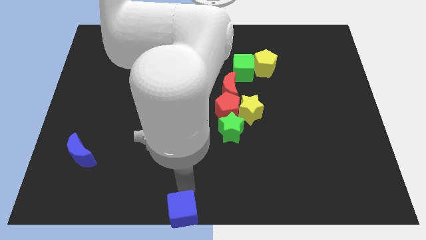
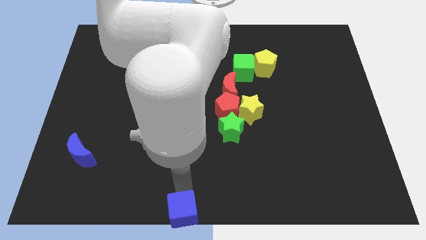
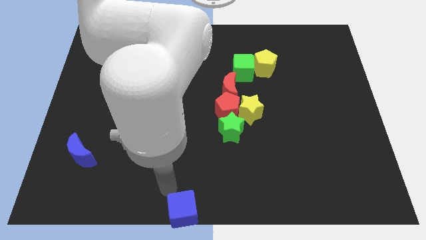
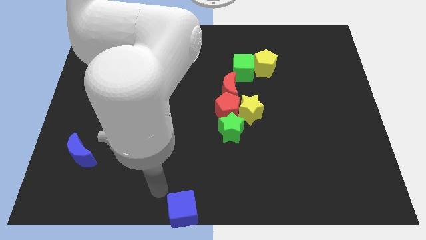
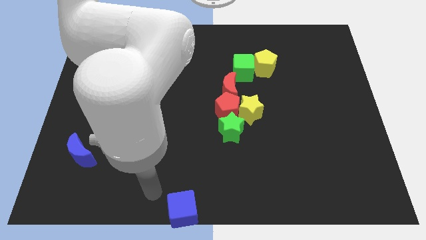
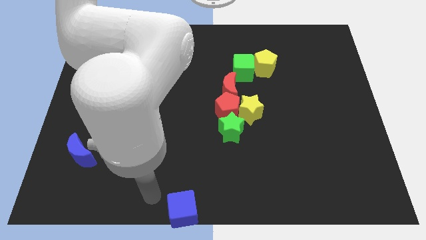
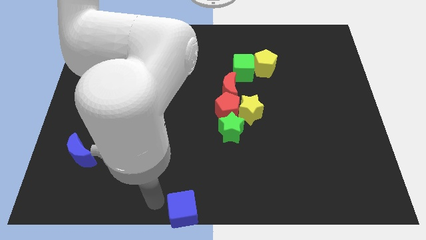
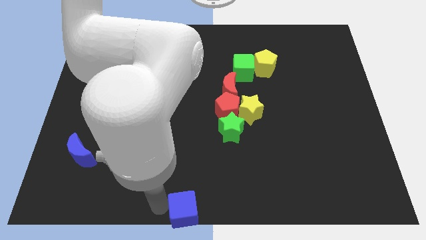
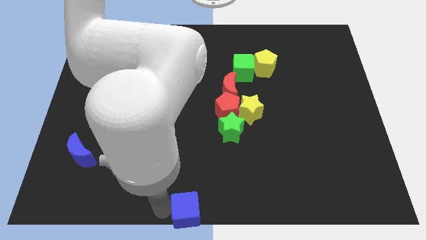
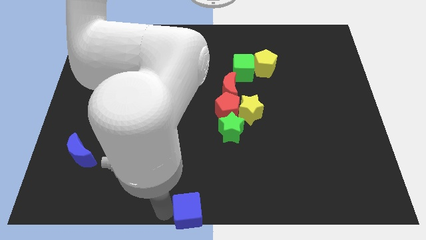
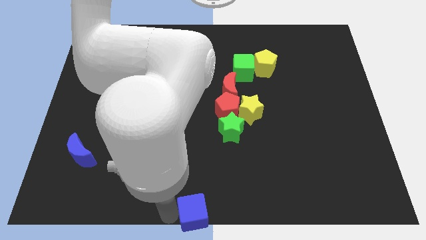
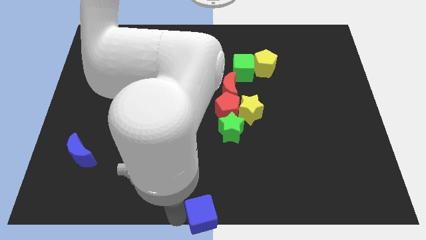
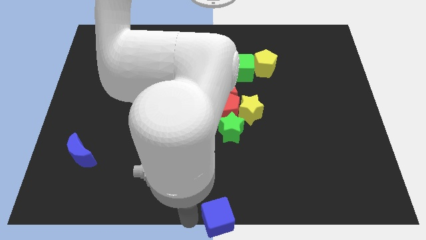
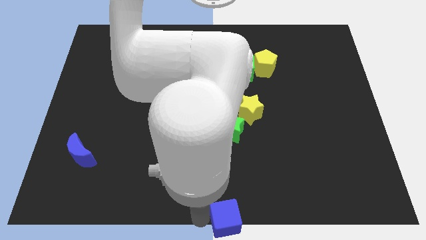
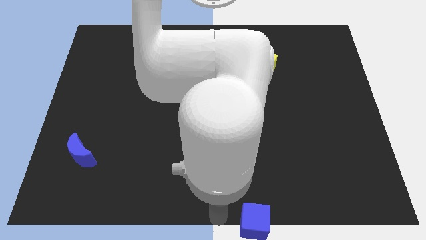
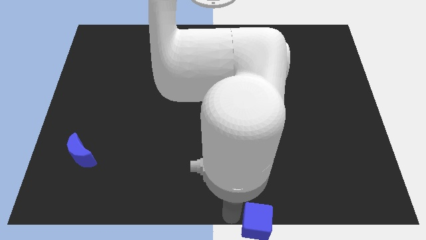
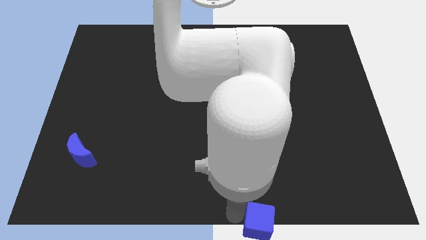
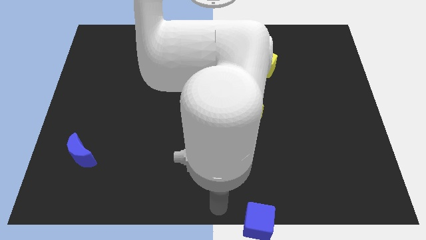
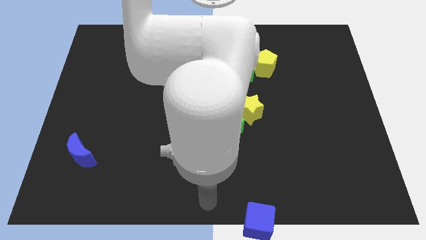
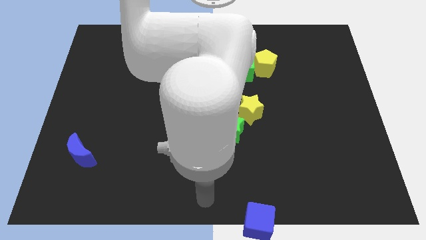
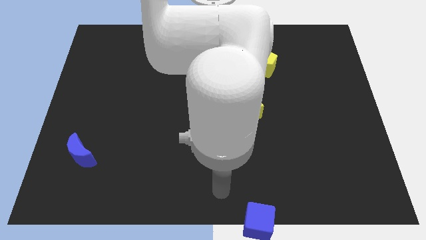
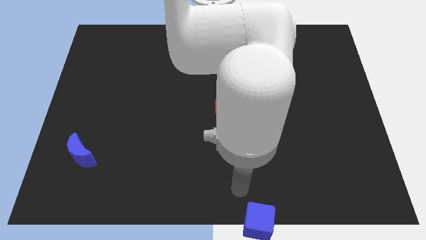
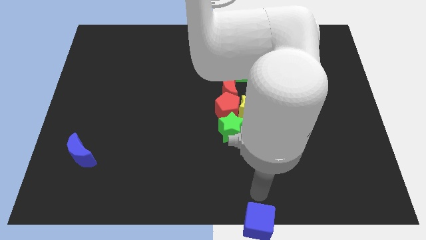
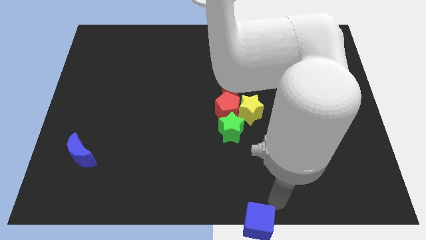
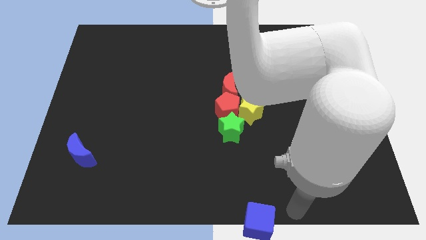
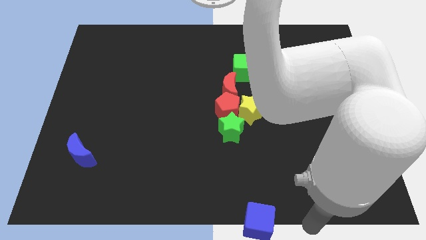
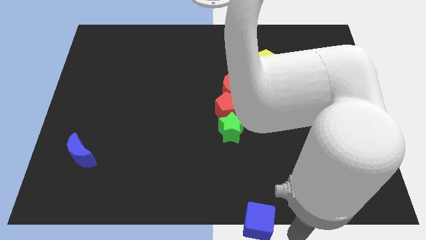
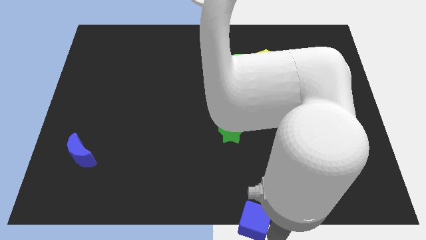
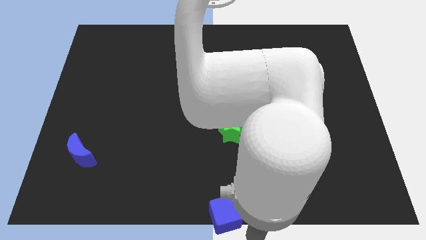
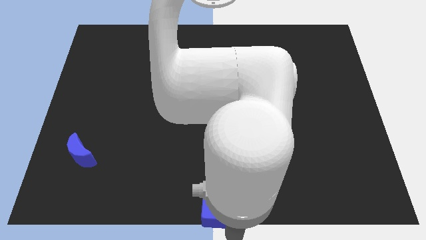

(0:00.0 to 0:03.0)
place the blue cube at the bottom center

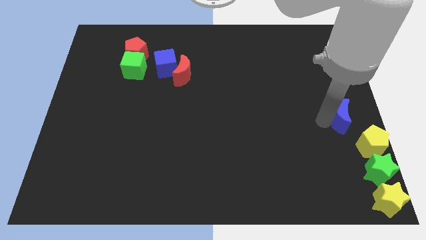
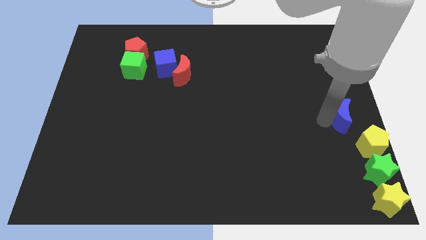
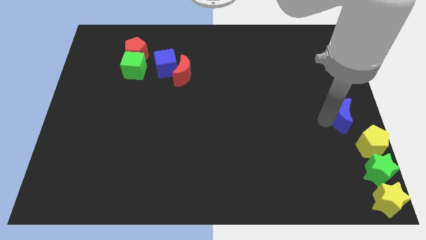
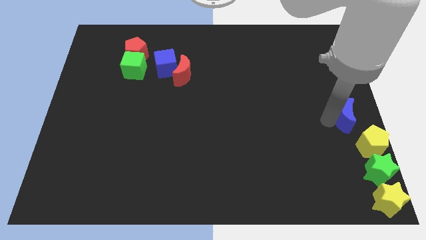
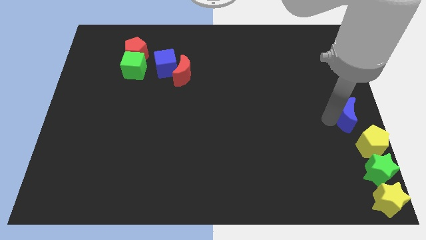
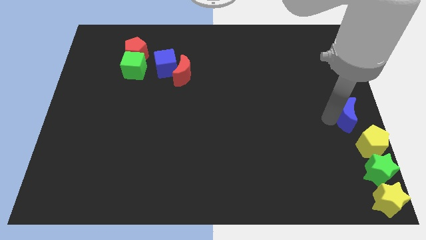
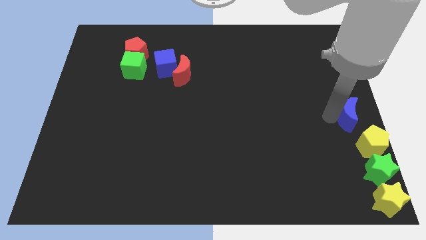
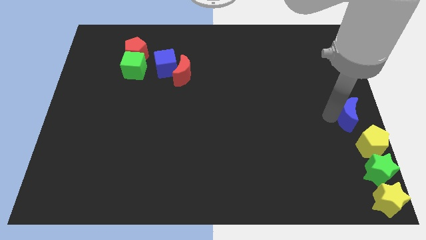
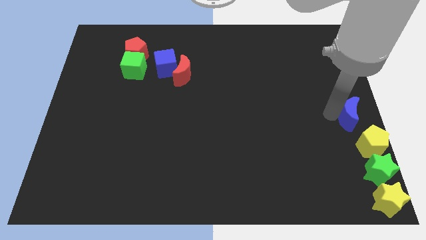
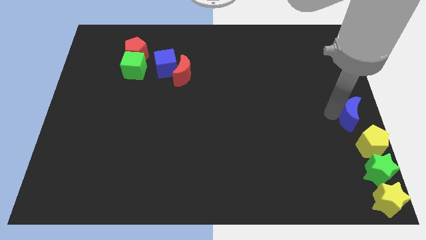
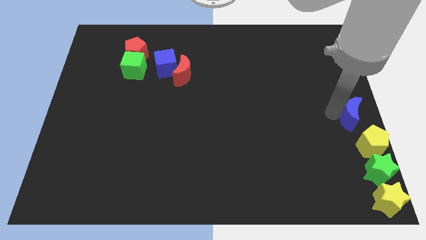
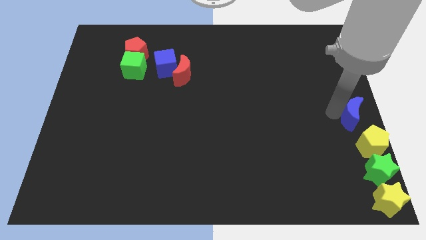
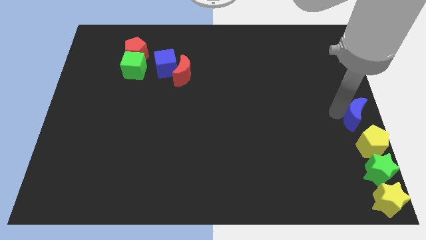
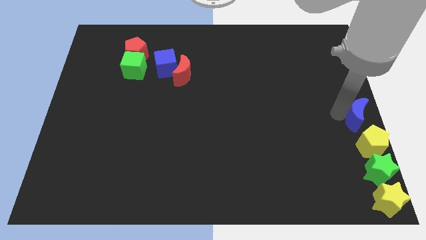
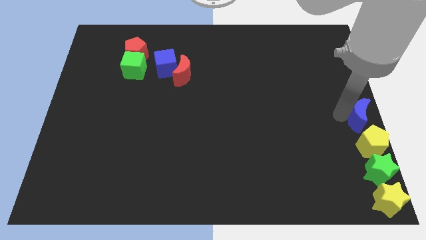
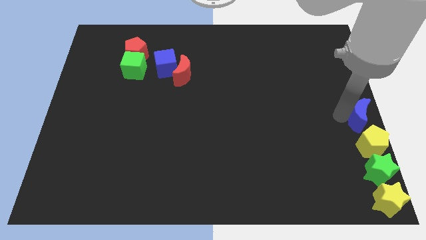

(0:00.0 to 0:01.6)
move the blue crescent to the top of yellow pentagon

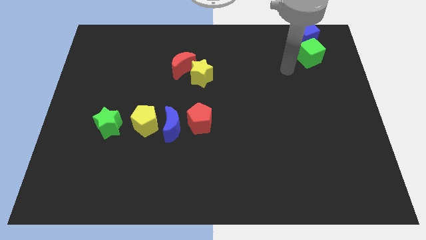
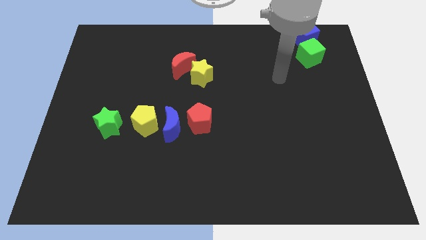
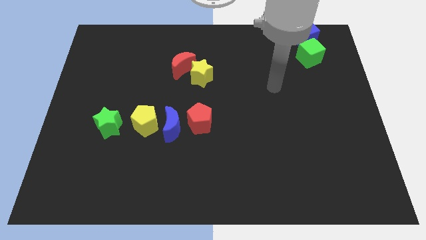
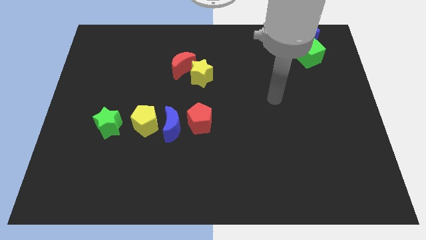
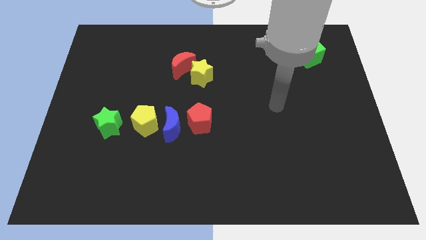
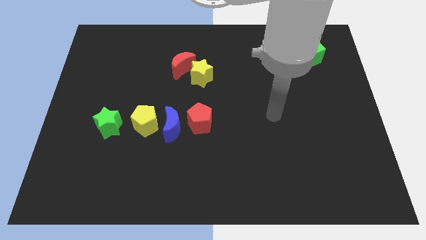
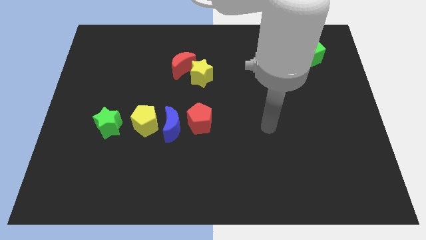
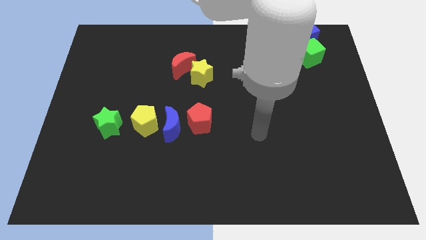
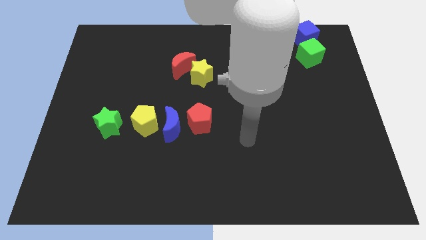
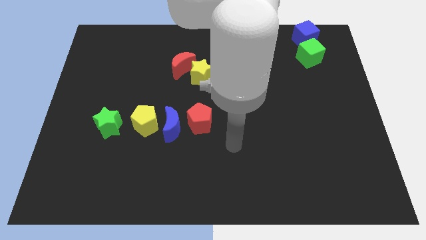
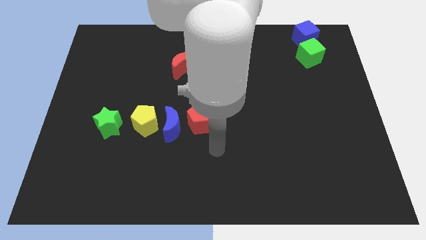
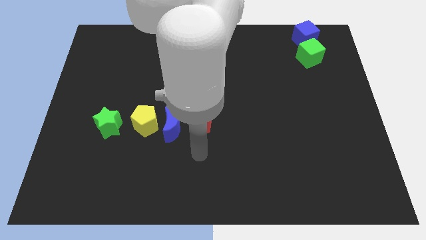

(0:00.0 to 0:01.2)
point your arm below the red crescent

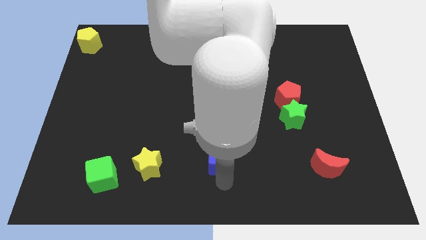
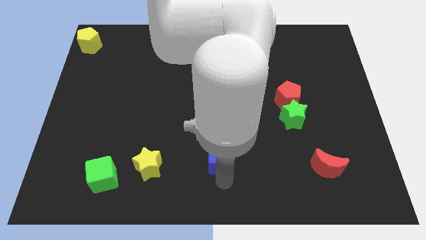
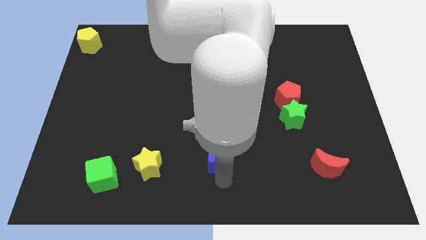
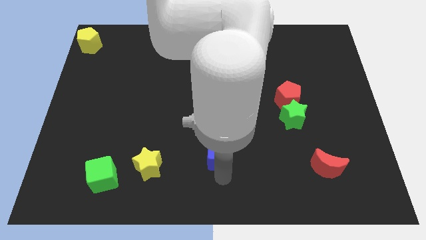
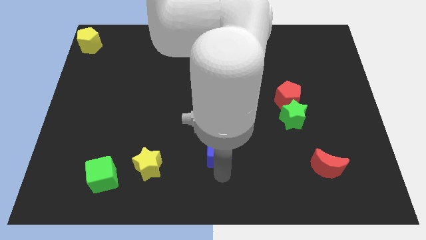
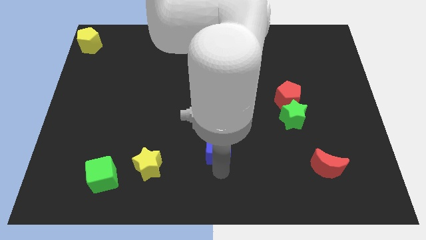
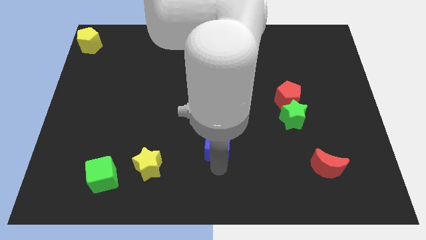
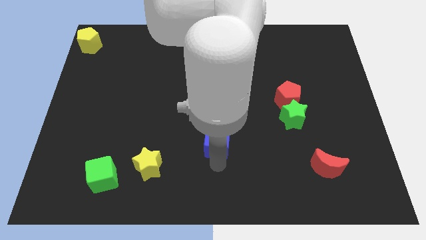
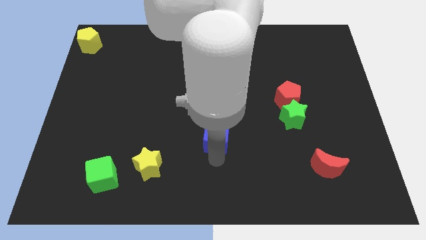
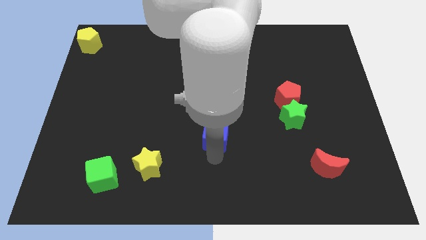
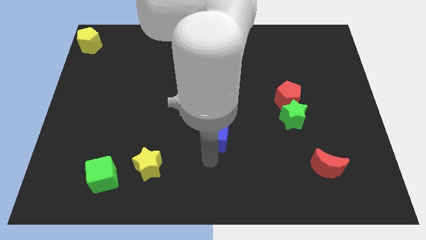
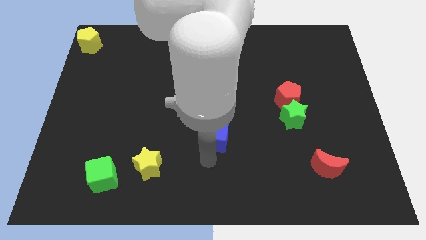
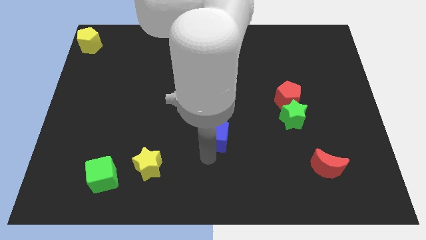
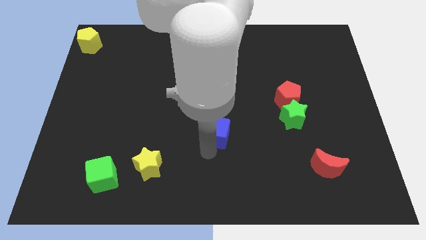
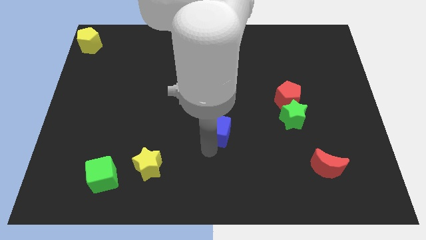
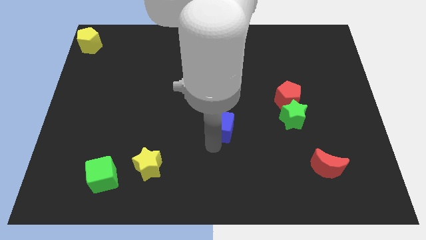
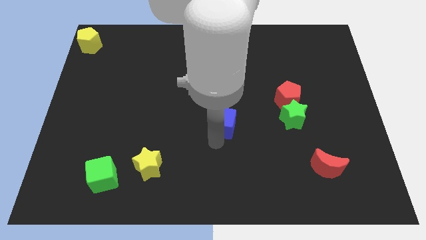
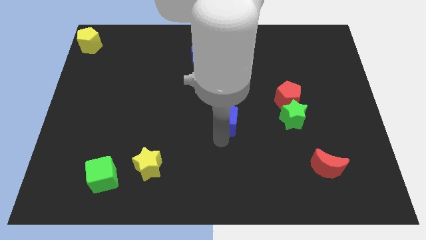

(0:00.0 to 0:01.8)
push blue cube upwards

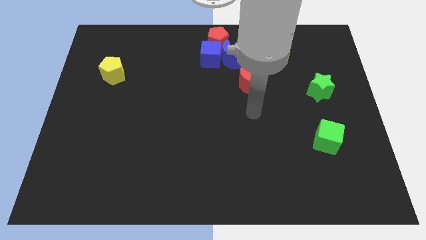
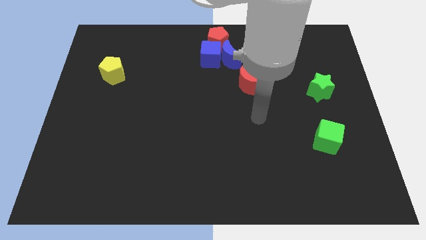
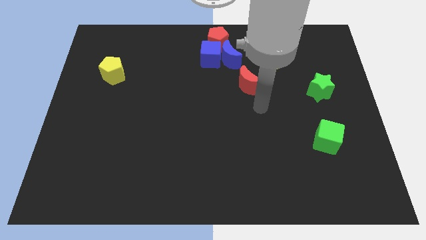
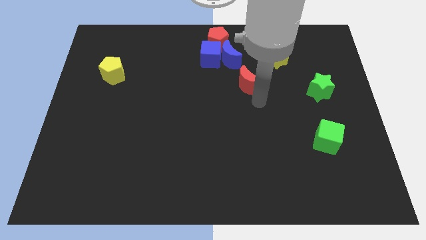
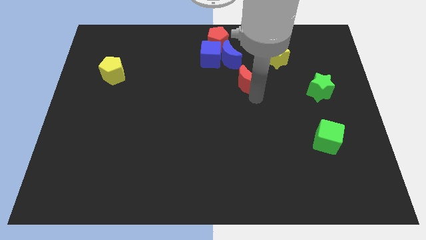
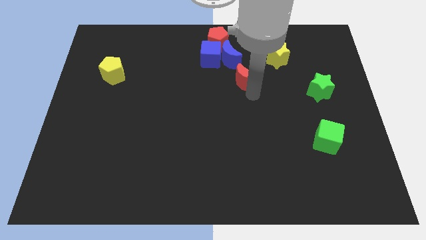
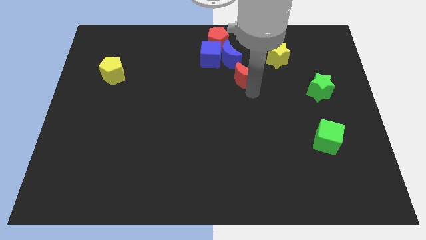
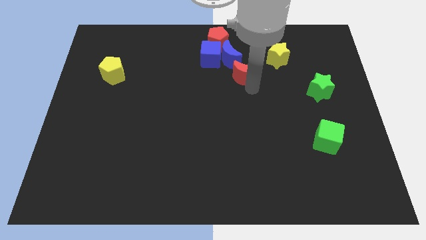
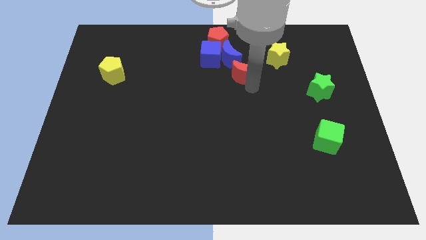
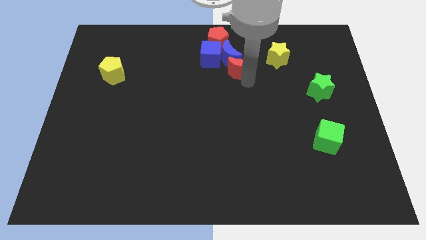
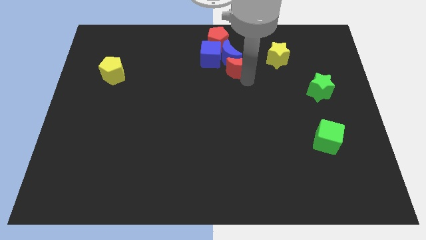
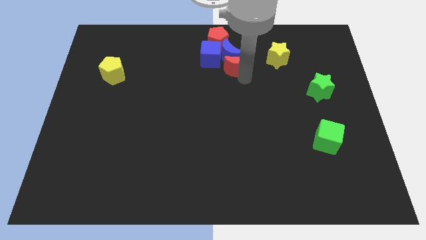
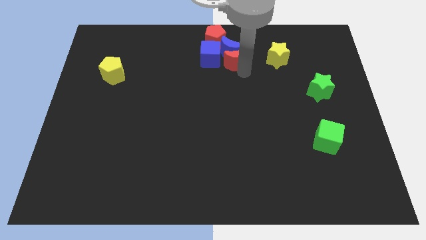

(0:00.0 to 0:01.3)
push red moon into the blue moon
